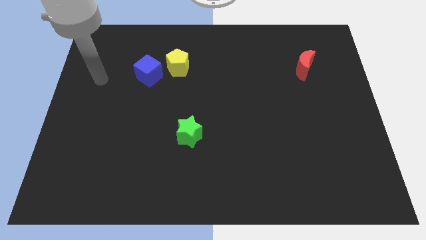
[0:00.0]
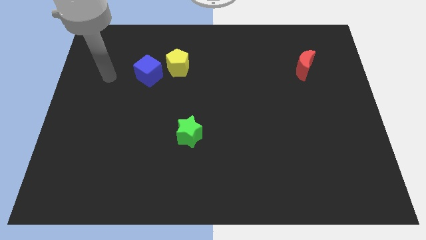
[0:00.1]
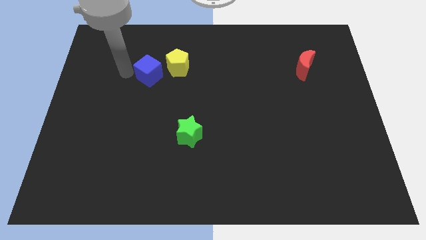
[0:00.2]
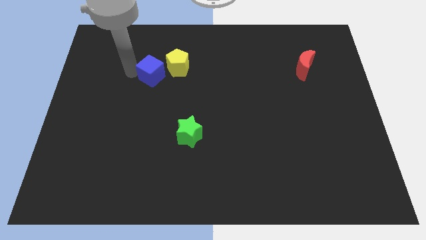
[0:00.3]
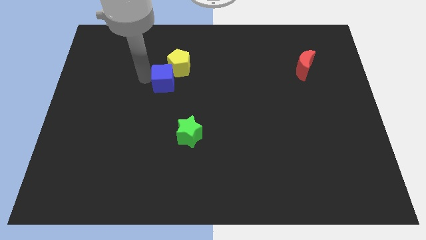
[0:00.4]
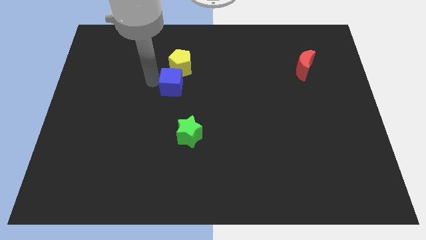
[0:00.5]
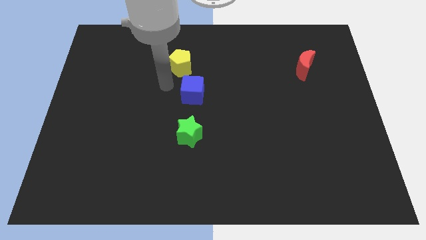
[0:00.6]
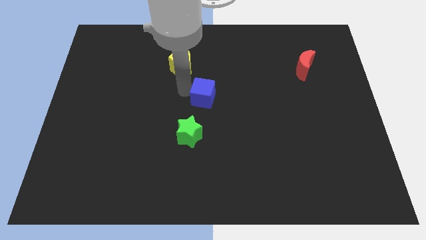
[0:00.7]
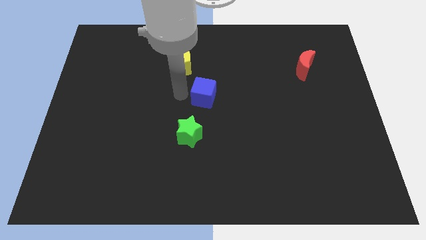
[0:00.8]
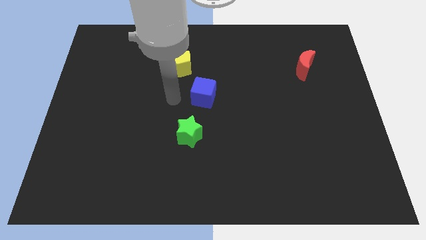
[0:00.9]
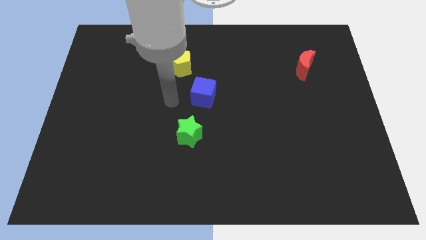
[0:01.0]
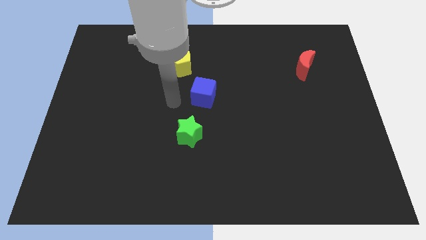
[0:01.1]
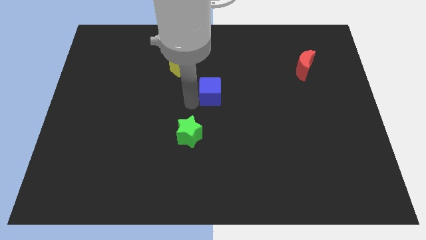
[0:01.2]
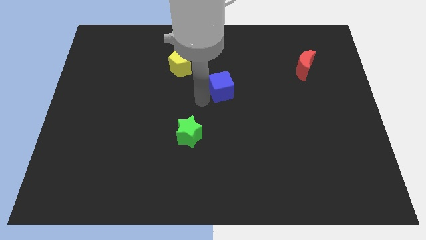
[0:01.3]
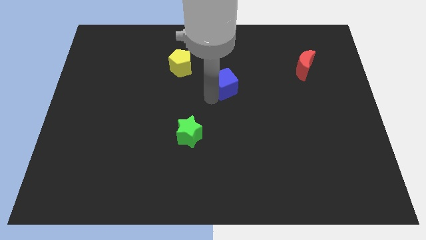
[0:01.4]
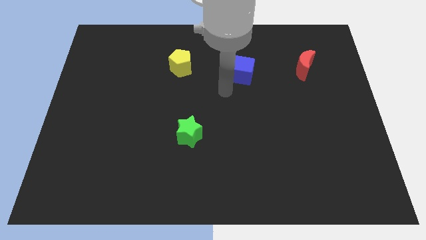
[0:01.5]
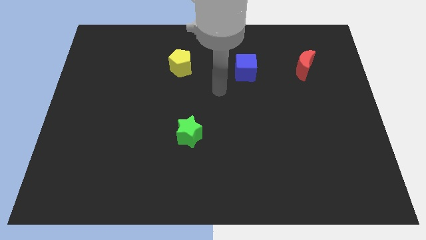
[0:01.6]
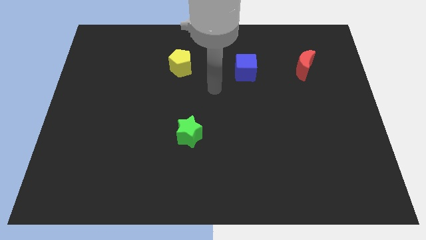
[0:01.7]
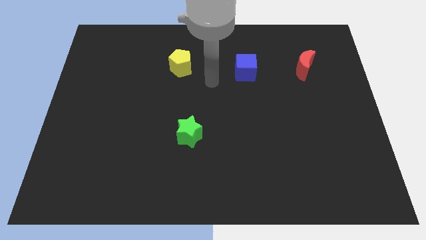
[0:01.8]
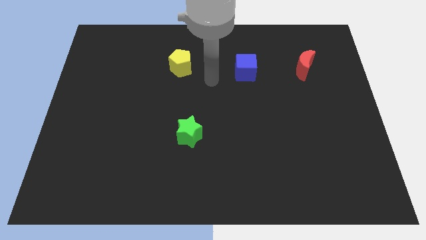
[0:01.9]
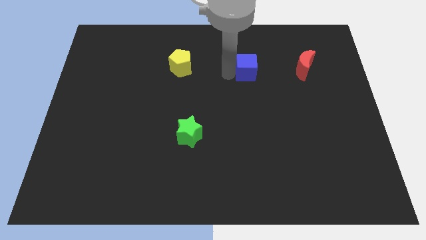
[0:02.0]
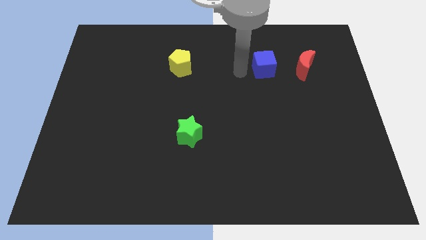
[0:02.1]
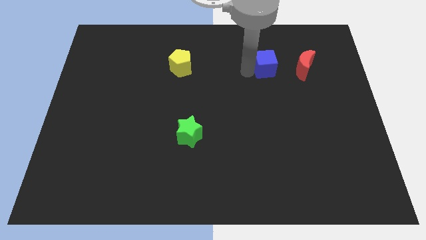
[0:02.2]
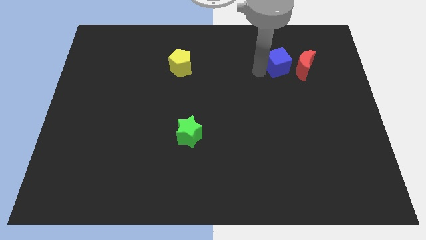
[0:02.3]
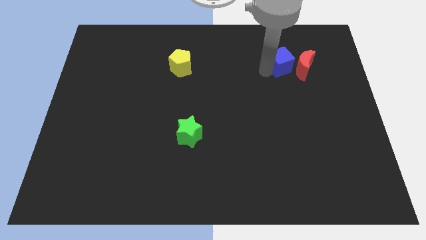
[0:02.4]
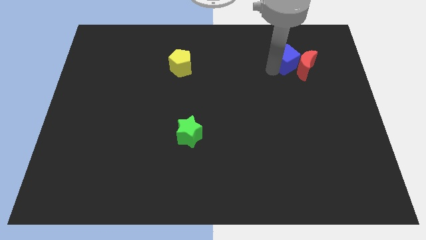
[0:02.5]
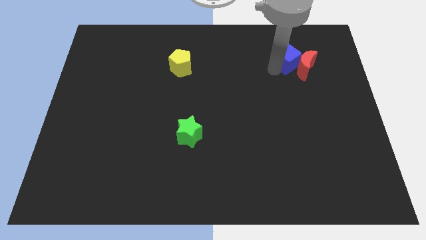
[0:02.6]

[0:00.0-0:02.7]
put the blue block to the red block

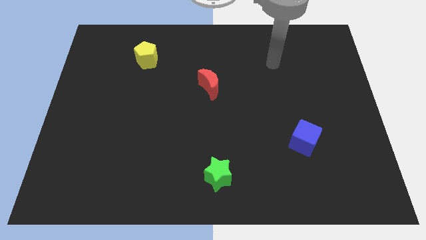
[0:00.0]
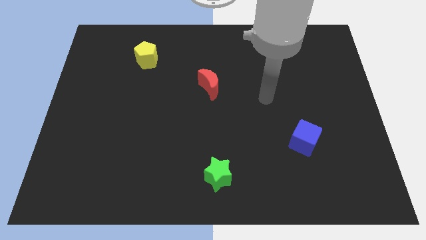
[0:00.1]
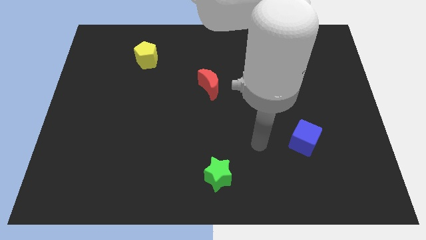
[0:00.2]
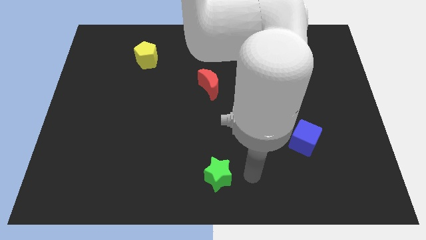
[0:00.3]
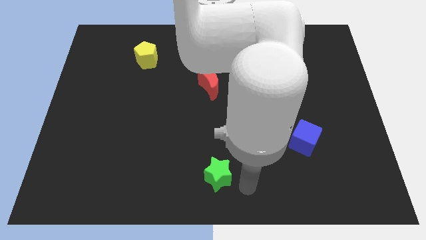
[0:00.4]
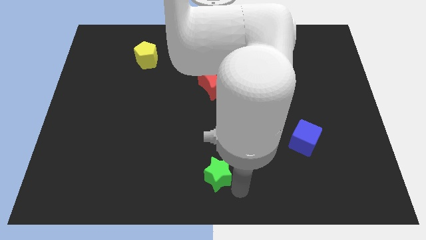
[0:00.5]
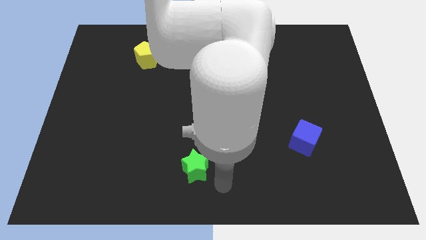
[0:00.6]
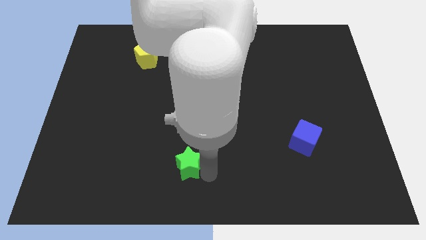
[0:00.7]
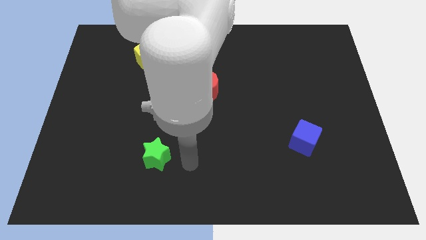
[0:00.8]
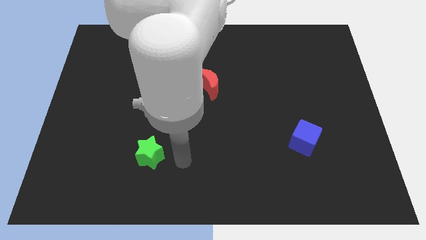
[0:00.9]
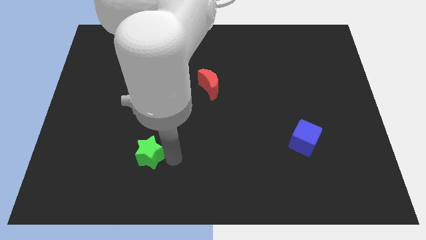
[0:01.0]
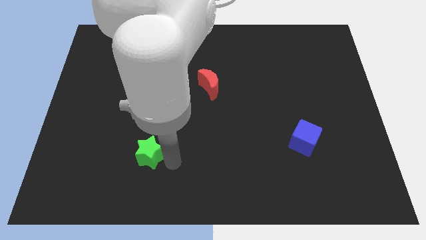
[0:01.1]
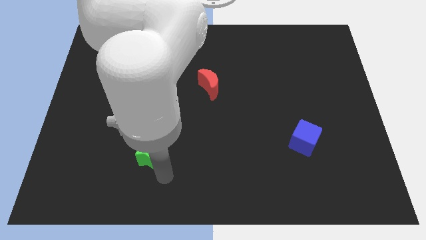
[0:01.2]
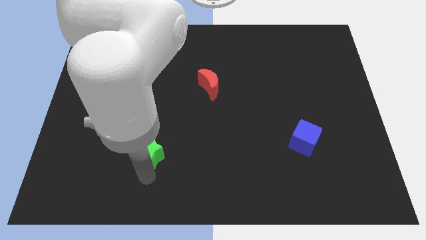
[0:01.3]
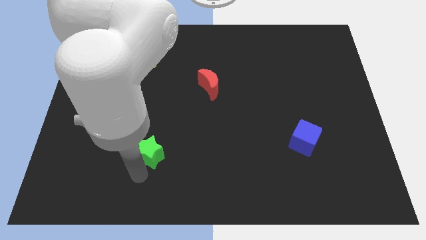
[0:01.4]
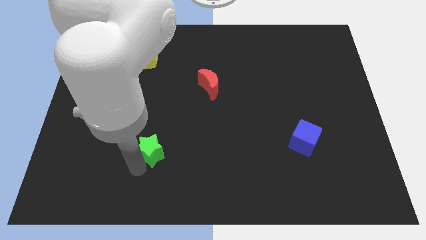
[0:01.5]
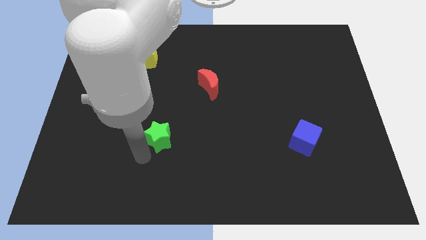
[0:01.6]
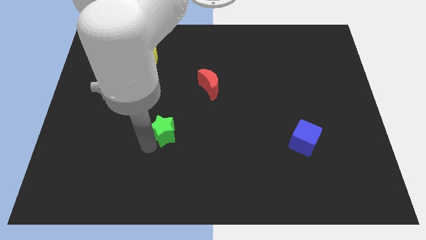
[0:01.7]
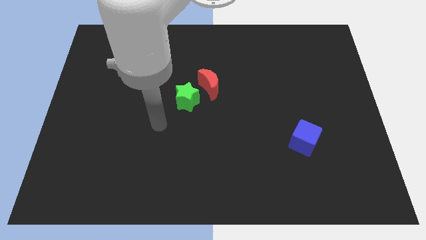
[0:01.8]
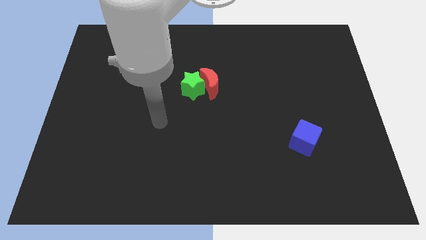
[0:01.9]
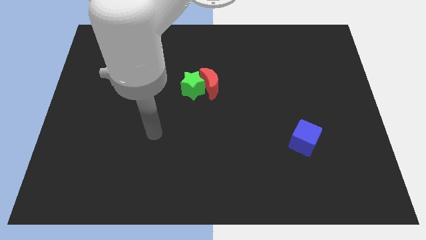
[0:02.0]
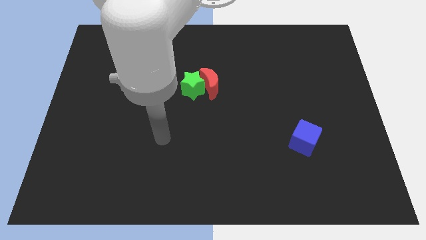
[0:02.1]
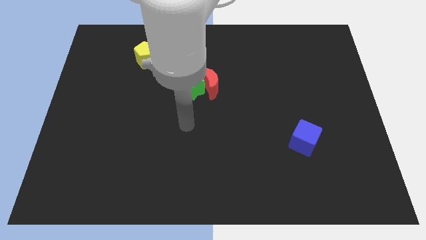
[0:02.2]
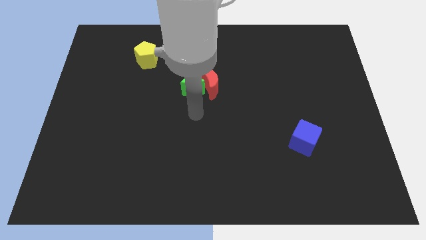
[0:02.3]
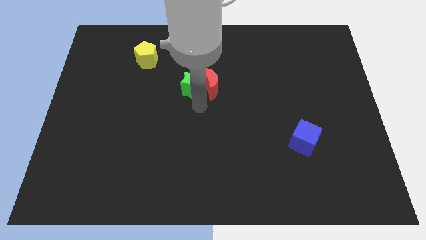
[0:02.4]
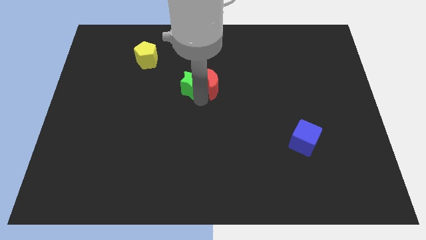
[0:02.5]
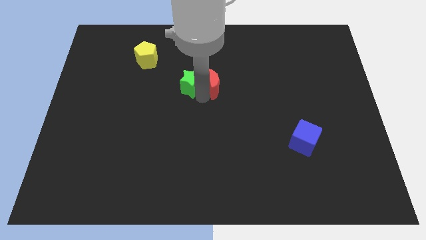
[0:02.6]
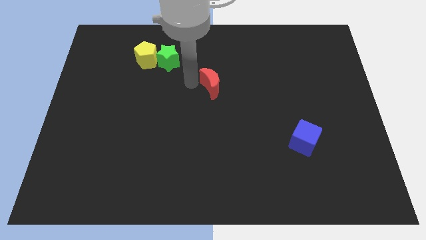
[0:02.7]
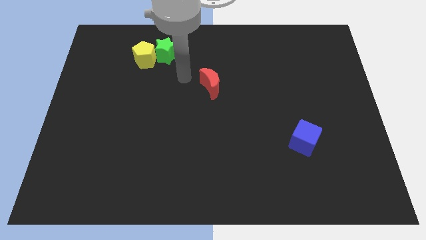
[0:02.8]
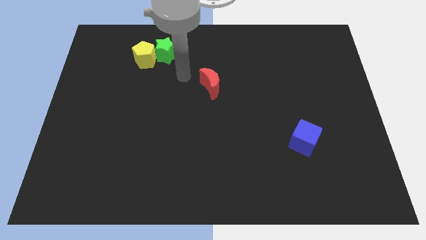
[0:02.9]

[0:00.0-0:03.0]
put the green star to the pentagon

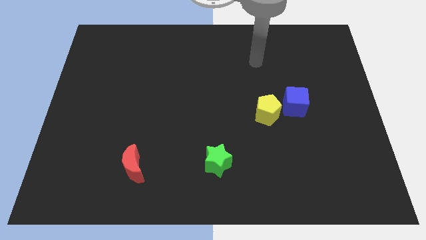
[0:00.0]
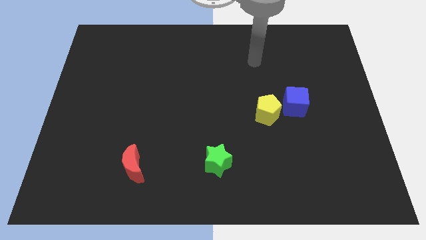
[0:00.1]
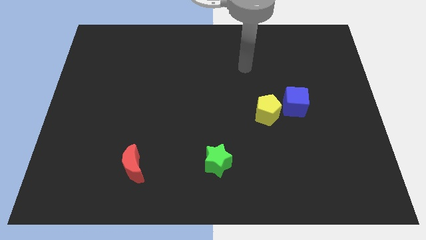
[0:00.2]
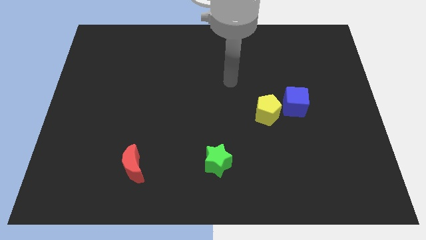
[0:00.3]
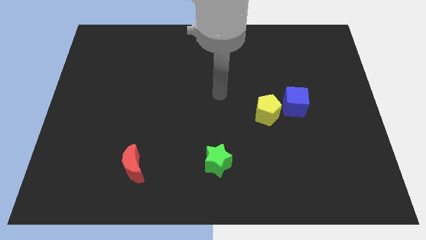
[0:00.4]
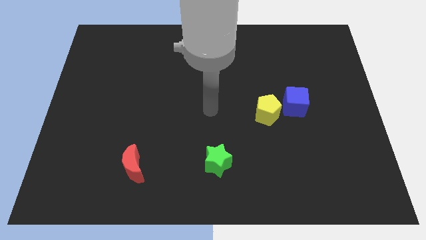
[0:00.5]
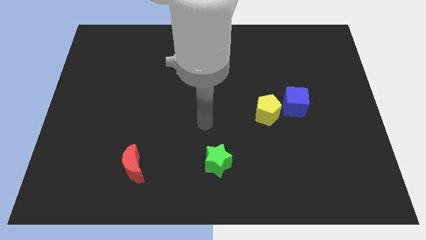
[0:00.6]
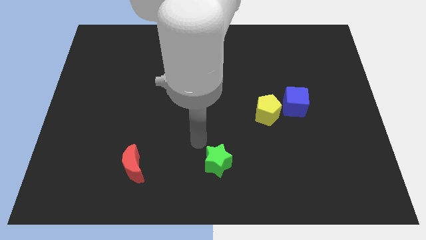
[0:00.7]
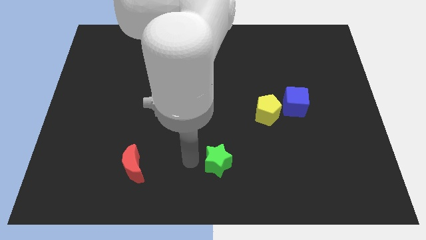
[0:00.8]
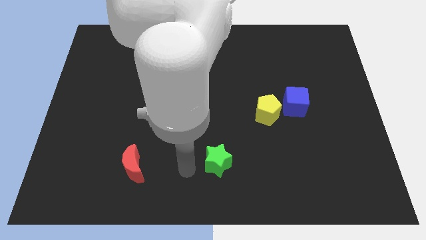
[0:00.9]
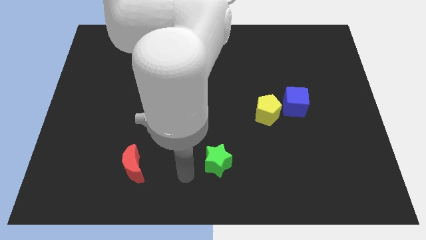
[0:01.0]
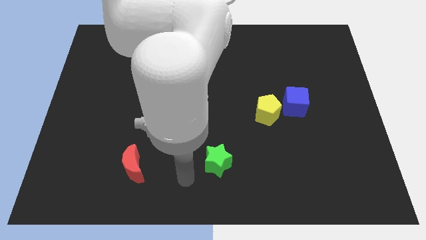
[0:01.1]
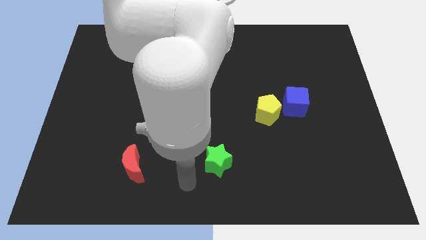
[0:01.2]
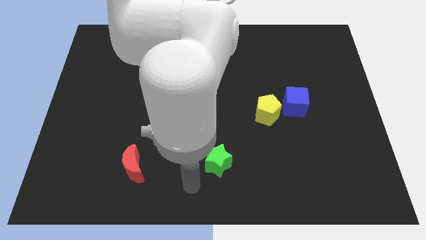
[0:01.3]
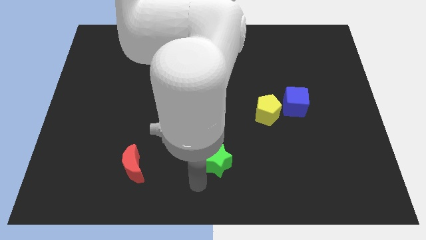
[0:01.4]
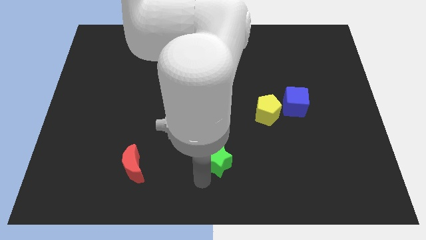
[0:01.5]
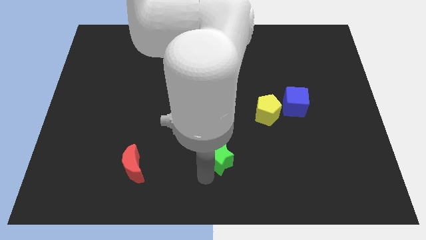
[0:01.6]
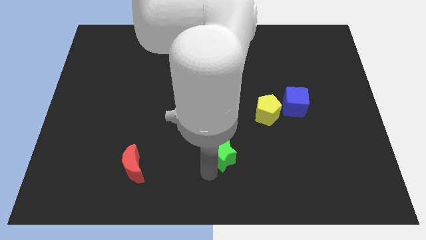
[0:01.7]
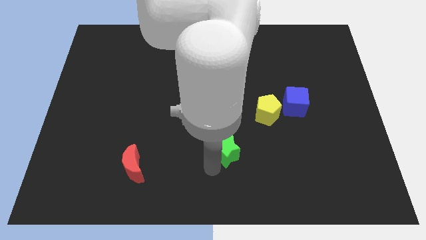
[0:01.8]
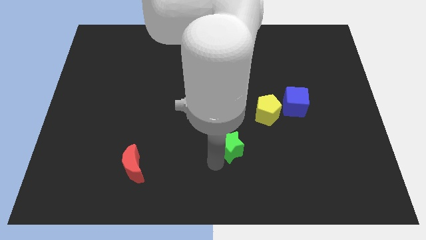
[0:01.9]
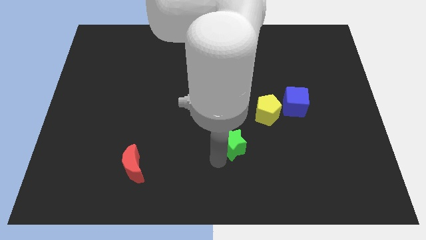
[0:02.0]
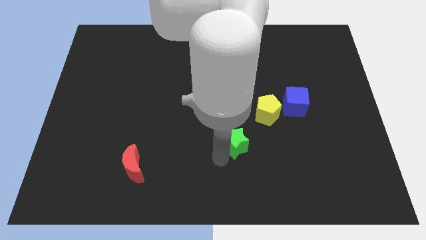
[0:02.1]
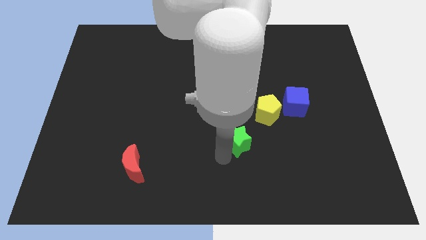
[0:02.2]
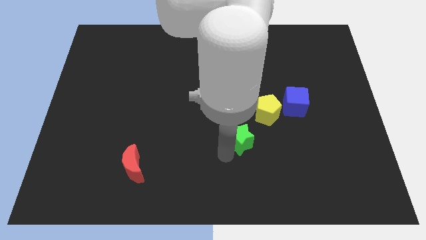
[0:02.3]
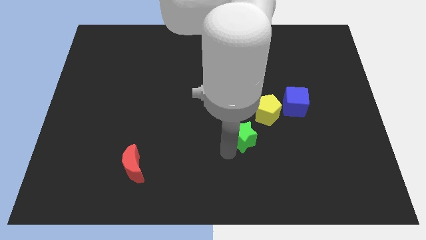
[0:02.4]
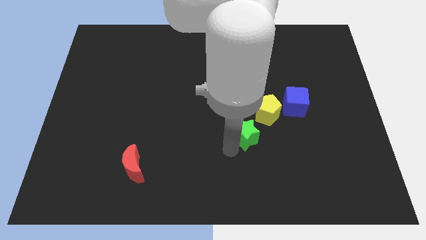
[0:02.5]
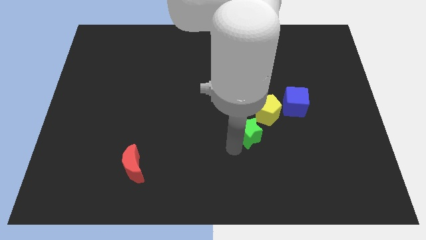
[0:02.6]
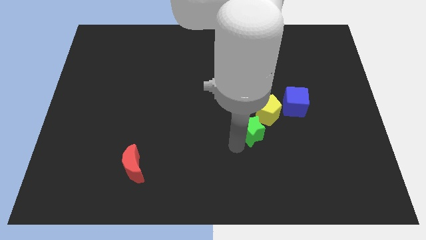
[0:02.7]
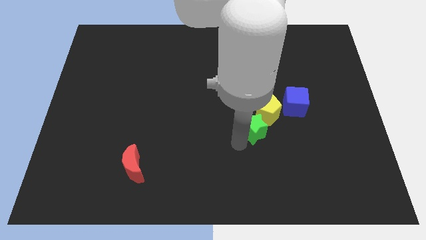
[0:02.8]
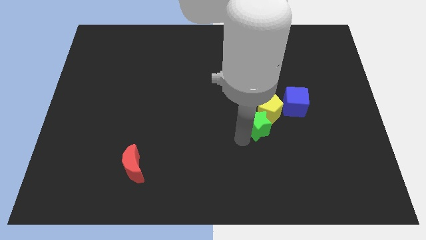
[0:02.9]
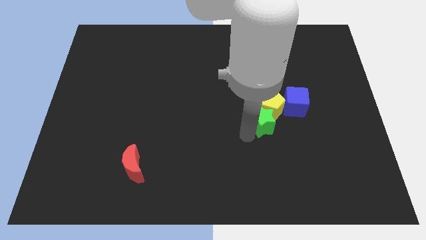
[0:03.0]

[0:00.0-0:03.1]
put the green block towards the yellow pentagon

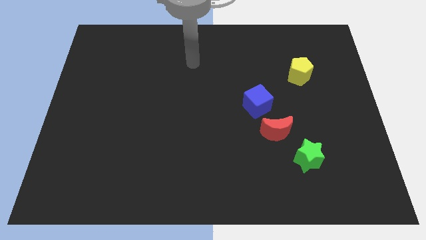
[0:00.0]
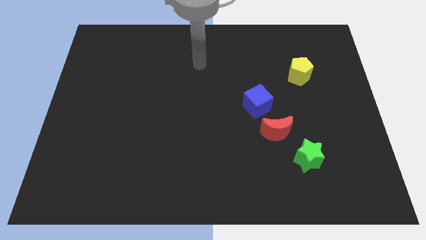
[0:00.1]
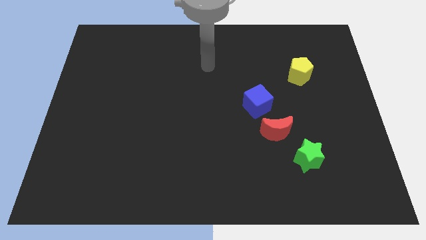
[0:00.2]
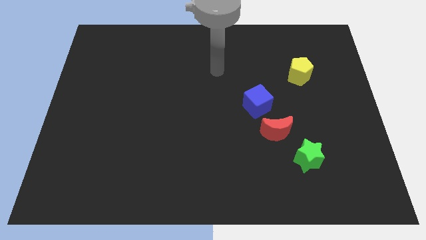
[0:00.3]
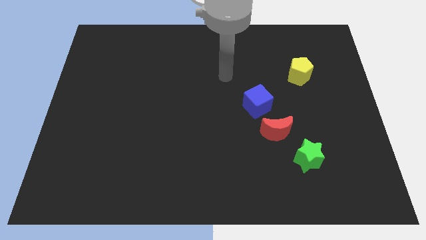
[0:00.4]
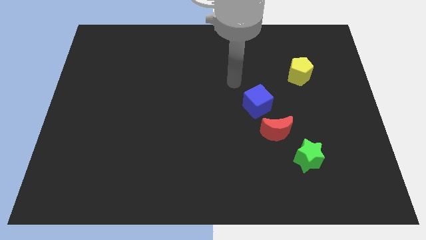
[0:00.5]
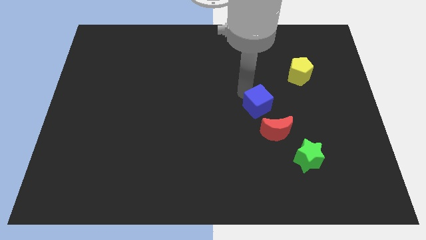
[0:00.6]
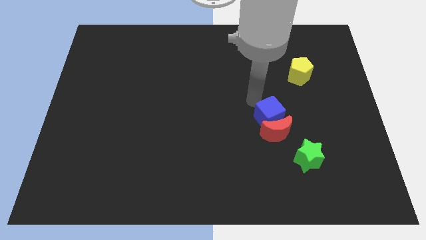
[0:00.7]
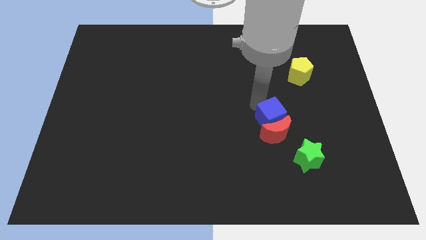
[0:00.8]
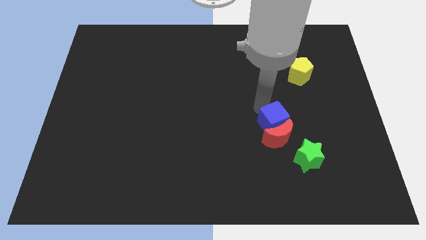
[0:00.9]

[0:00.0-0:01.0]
put the blue cube next to the moon
